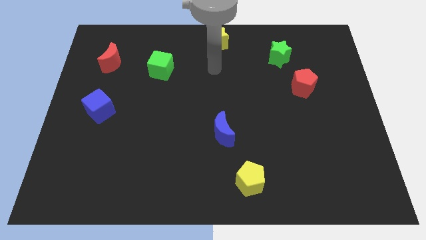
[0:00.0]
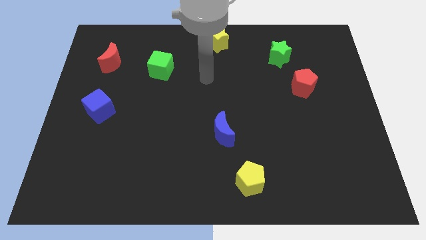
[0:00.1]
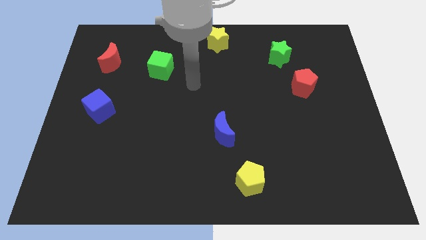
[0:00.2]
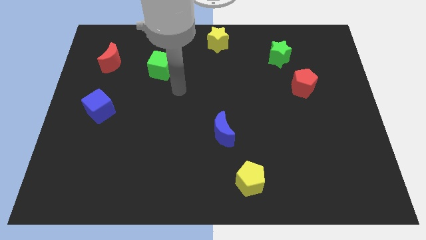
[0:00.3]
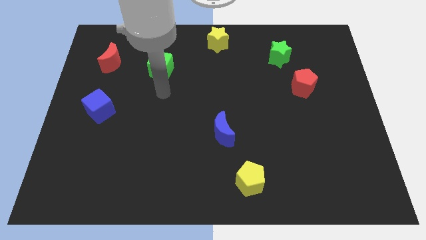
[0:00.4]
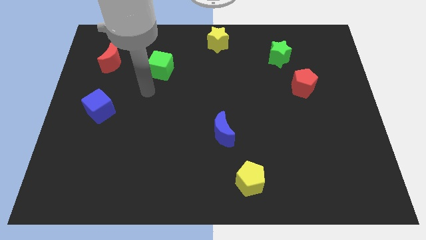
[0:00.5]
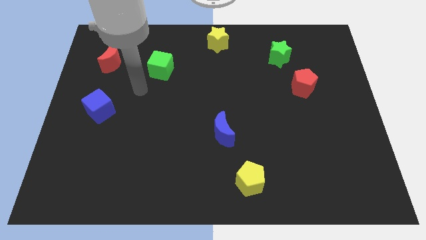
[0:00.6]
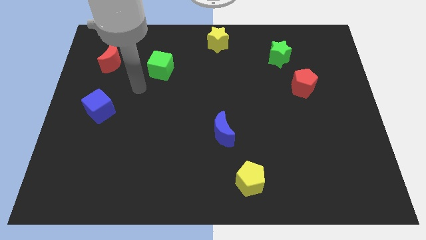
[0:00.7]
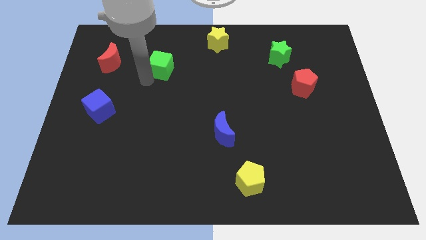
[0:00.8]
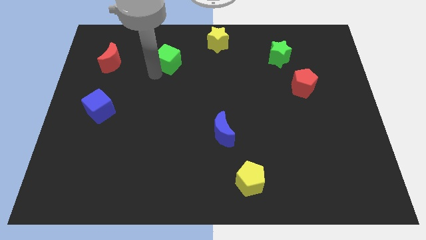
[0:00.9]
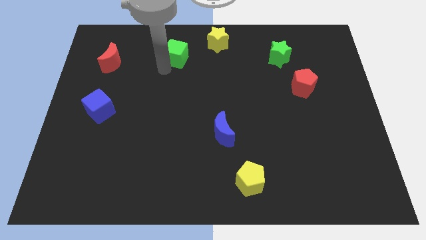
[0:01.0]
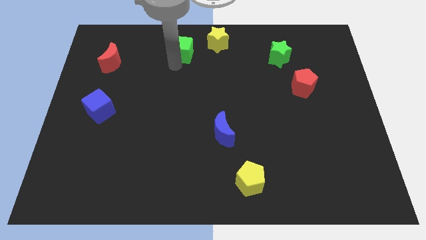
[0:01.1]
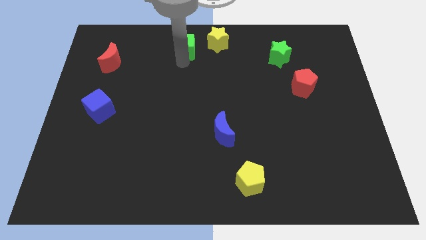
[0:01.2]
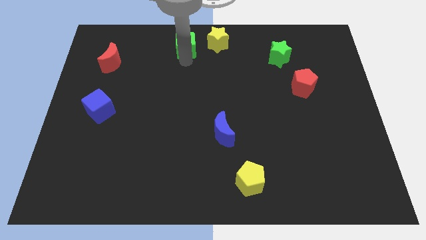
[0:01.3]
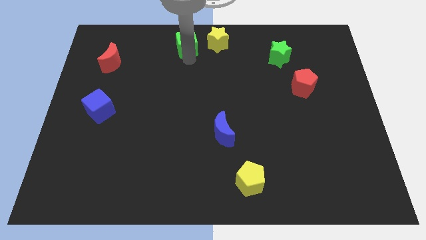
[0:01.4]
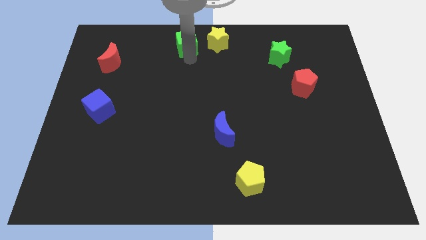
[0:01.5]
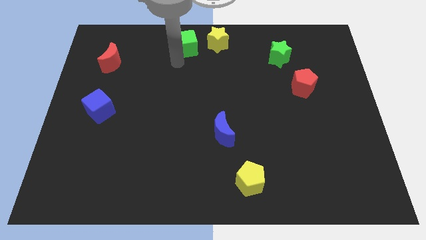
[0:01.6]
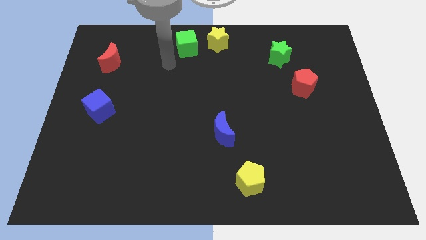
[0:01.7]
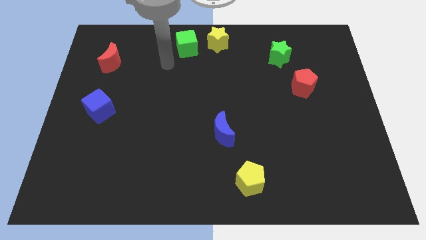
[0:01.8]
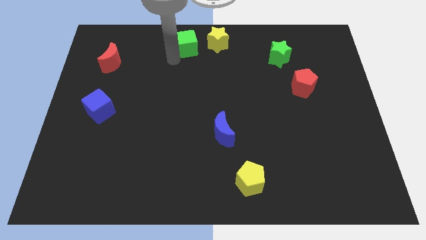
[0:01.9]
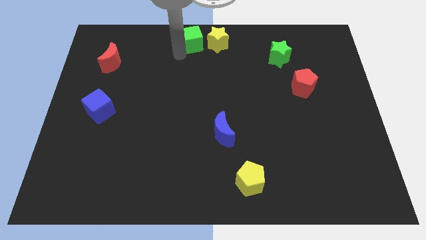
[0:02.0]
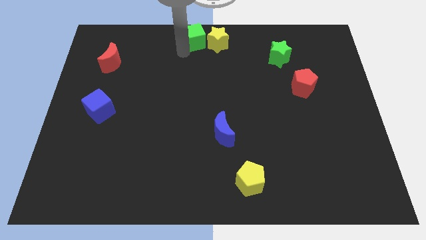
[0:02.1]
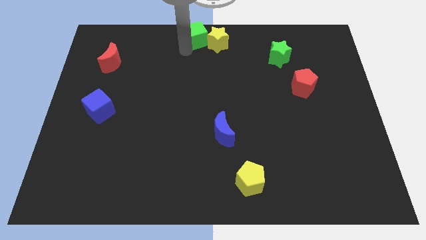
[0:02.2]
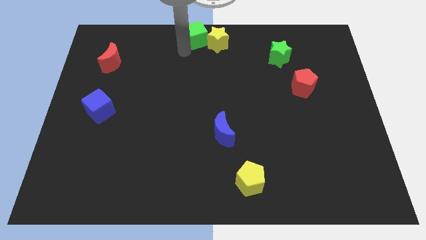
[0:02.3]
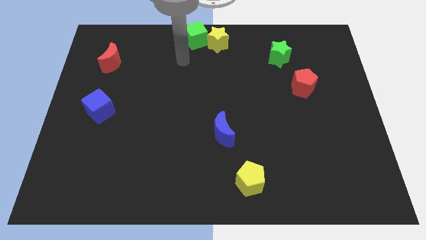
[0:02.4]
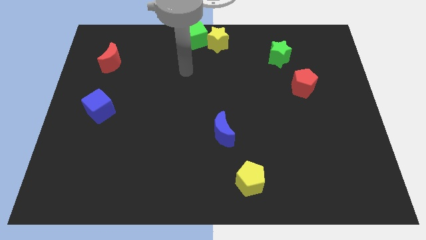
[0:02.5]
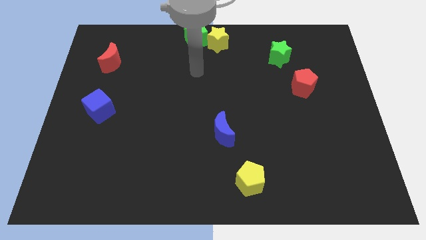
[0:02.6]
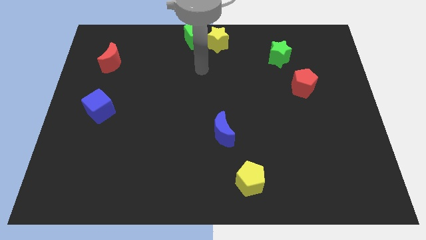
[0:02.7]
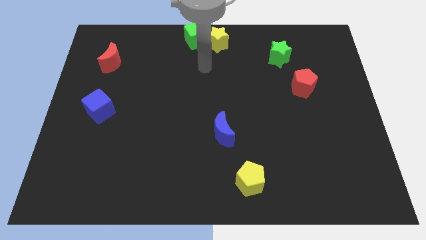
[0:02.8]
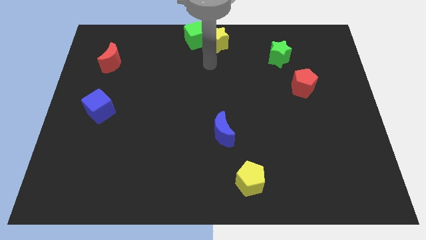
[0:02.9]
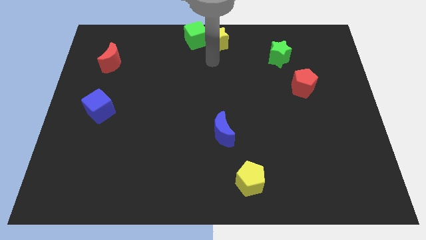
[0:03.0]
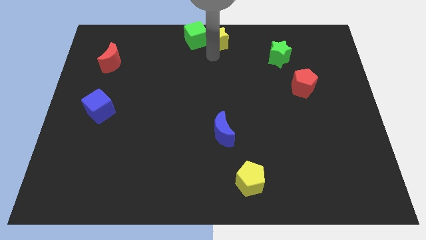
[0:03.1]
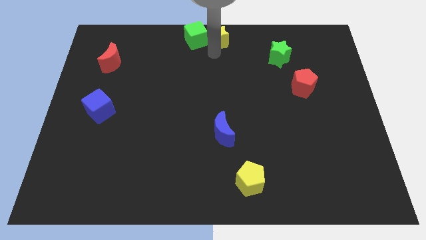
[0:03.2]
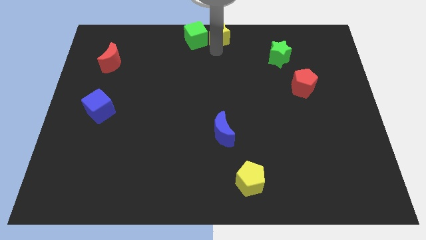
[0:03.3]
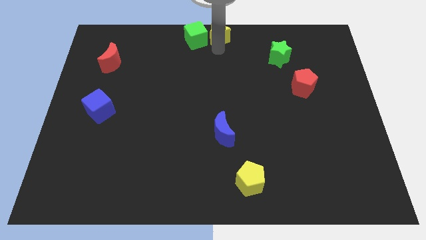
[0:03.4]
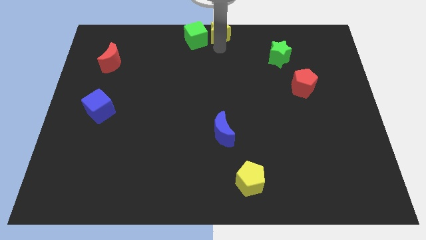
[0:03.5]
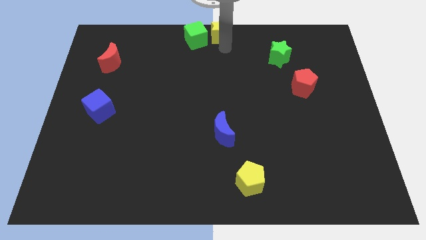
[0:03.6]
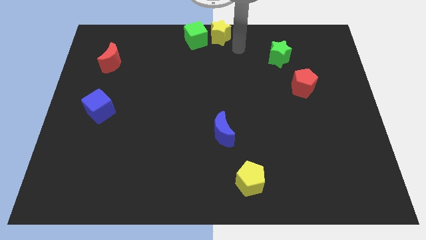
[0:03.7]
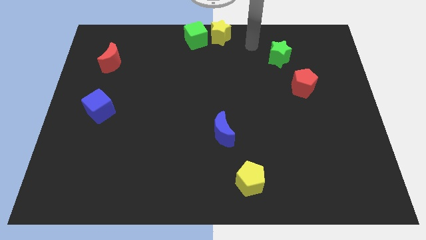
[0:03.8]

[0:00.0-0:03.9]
adjust the yellow star and the green cube at th top center of the board

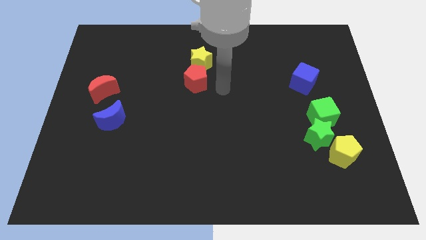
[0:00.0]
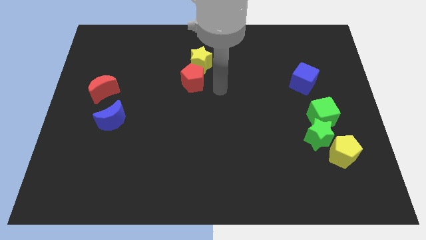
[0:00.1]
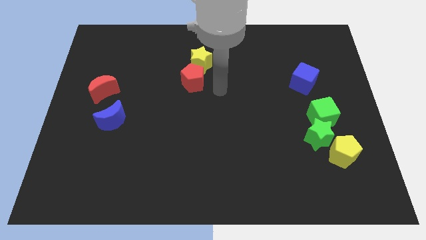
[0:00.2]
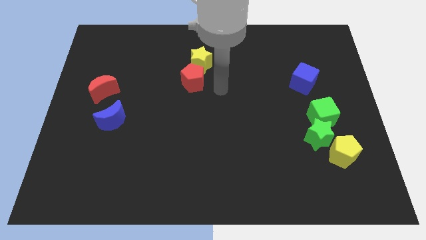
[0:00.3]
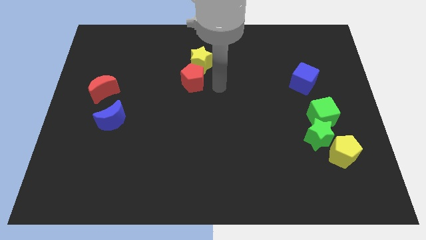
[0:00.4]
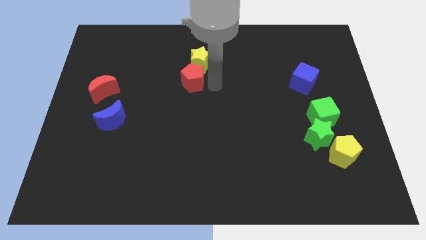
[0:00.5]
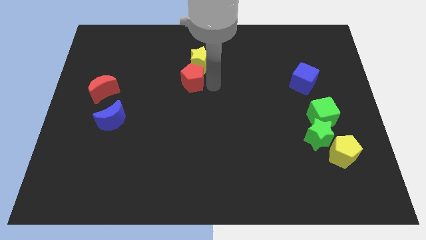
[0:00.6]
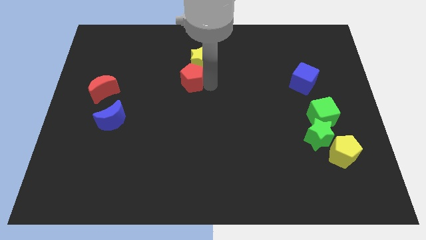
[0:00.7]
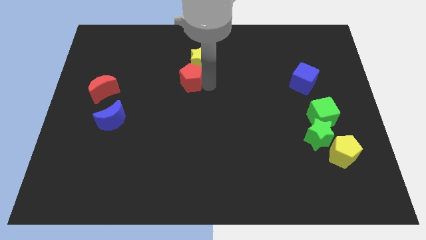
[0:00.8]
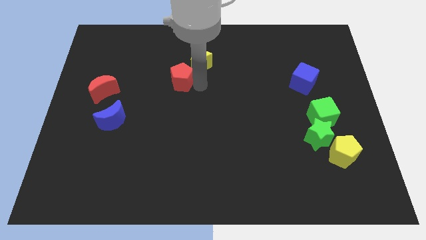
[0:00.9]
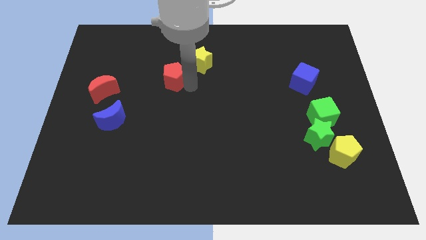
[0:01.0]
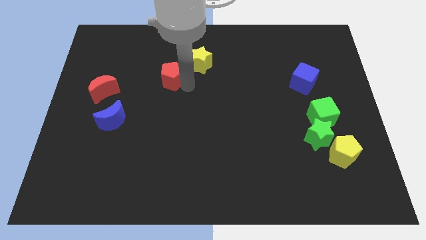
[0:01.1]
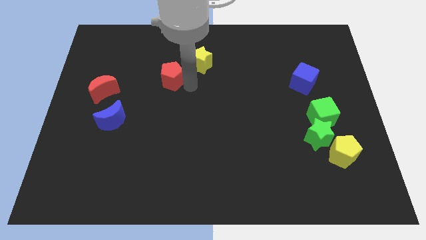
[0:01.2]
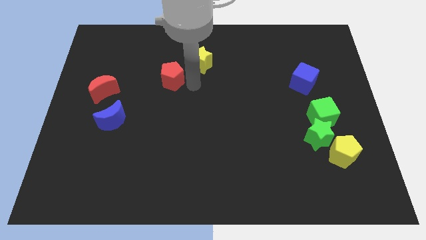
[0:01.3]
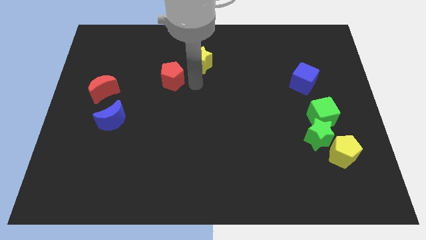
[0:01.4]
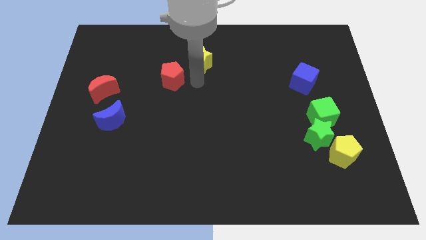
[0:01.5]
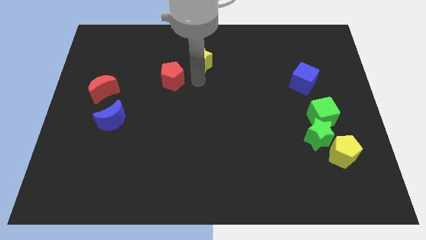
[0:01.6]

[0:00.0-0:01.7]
separate the red pentagon from the yellow star

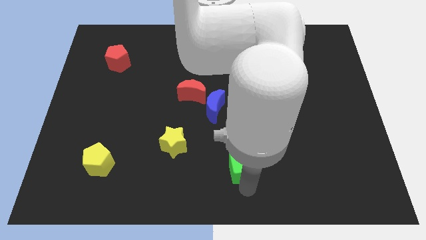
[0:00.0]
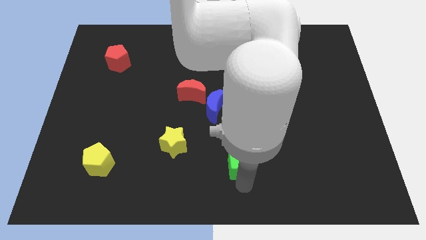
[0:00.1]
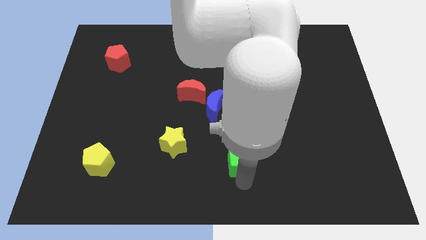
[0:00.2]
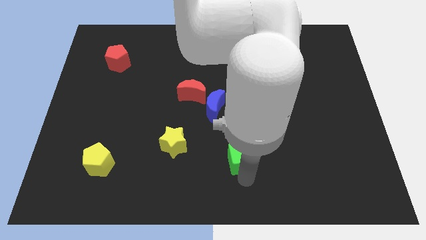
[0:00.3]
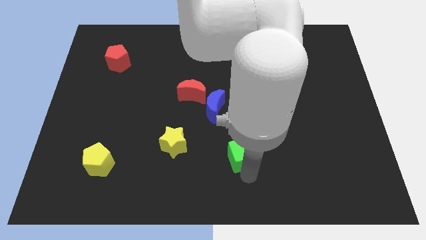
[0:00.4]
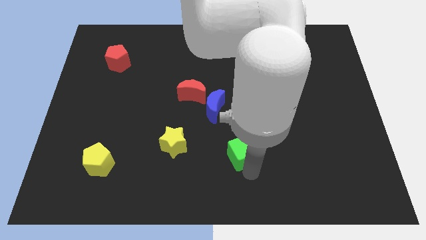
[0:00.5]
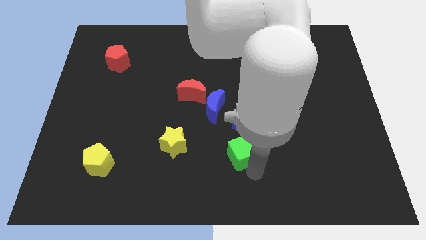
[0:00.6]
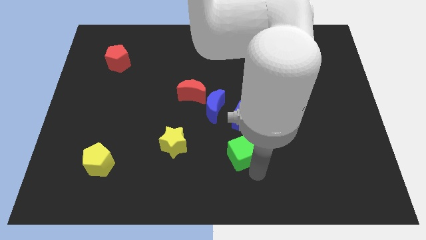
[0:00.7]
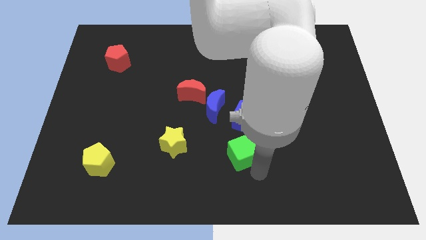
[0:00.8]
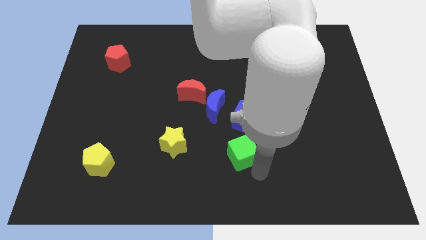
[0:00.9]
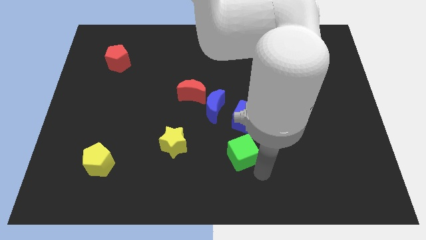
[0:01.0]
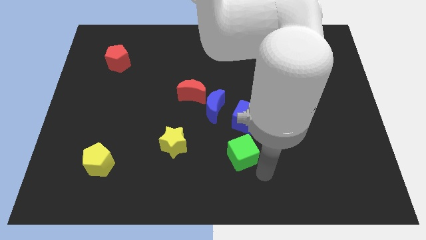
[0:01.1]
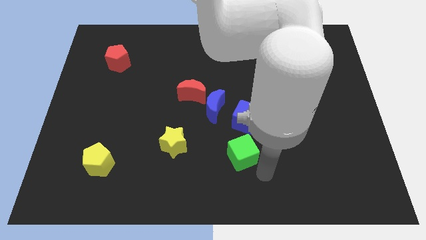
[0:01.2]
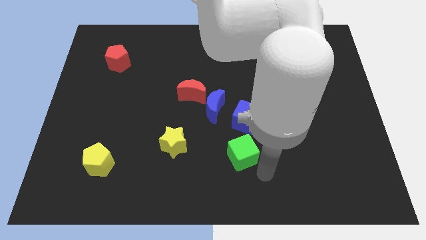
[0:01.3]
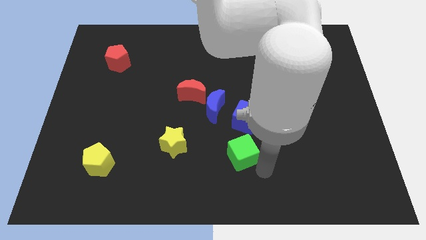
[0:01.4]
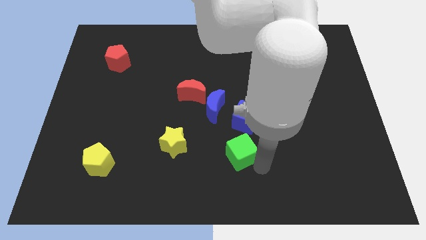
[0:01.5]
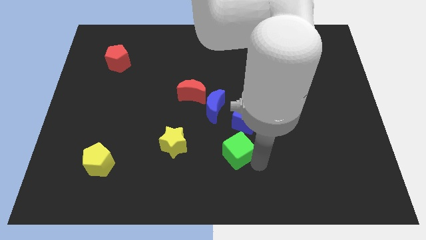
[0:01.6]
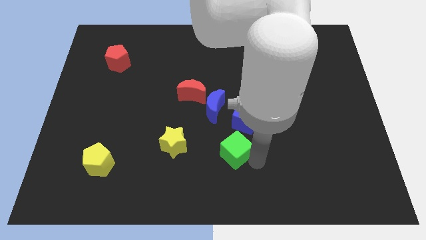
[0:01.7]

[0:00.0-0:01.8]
move the green cube towards the bottom side of the blue cube

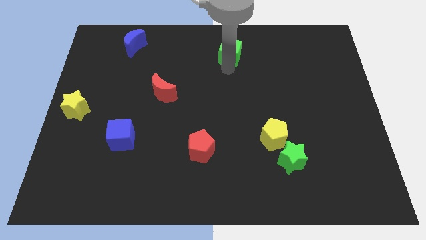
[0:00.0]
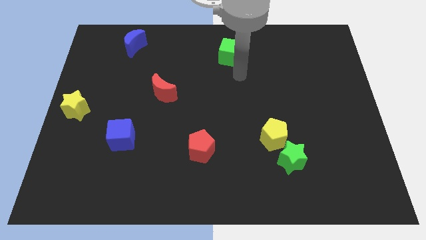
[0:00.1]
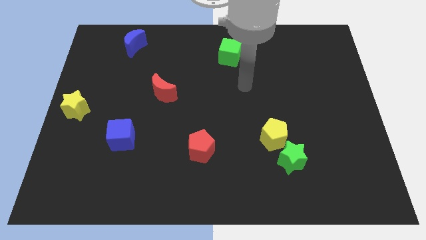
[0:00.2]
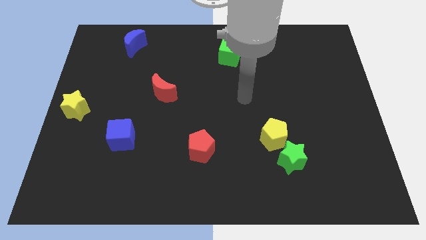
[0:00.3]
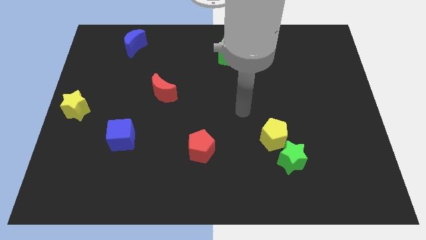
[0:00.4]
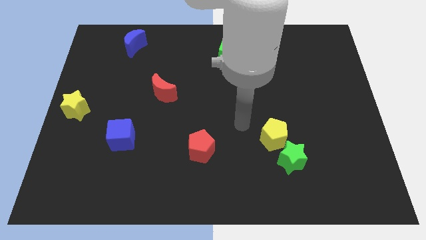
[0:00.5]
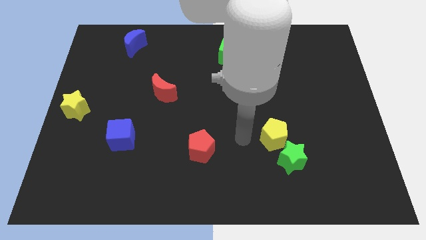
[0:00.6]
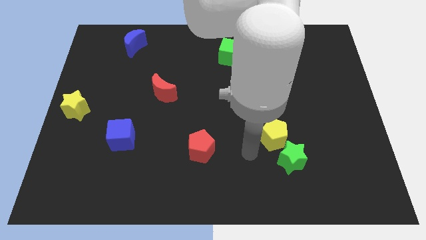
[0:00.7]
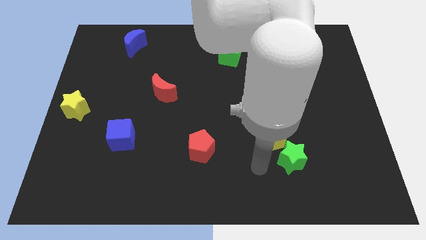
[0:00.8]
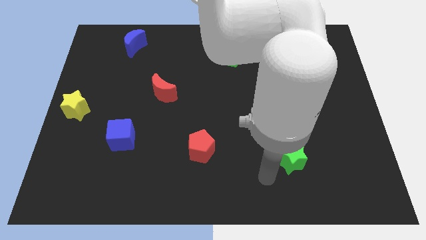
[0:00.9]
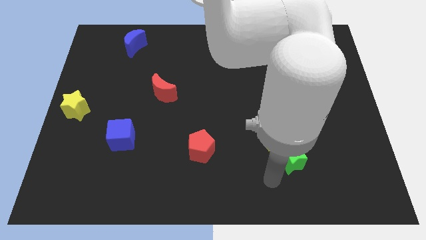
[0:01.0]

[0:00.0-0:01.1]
slide your arm away from green cube

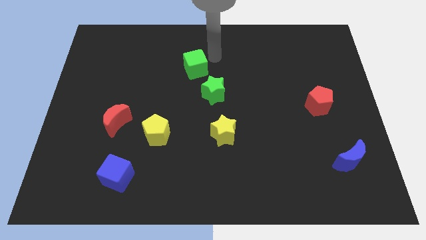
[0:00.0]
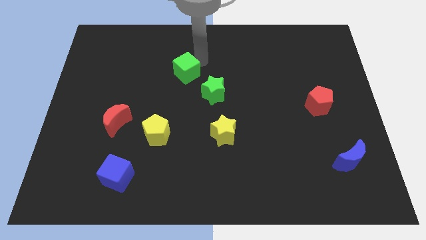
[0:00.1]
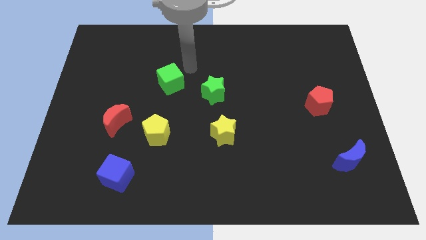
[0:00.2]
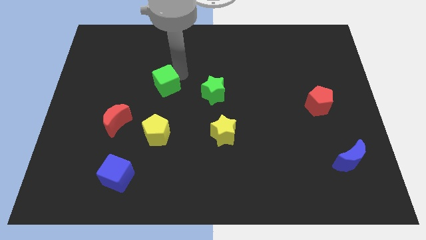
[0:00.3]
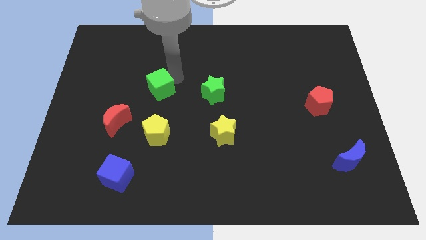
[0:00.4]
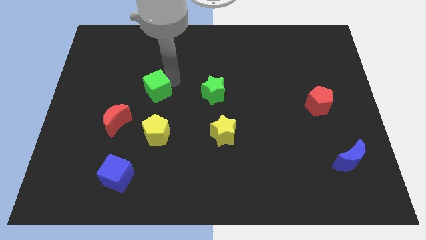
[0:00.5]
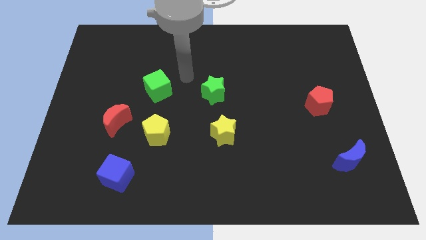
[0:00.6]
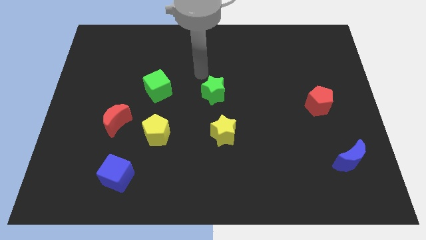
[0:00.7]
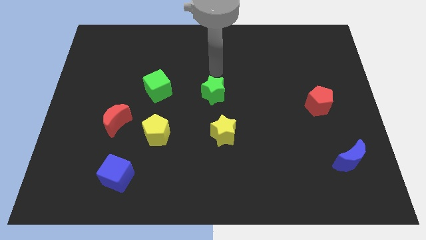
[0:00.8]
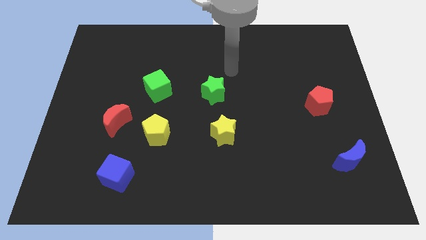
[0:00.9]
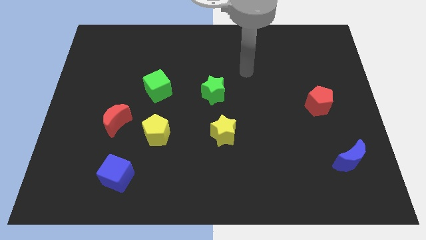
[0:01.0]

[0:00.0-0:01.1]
push the green cube left side to the green star
